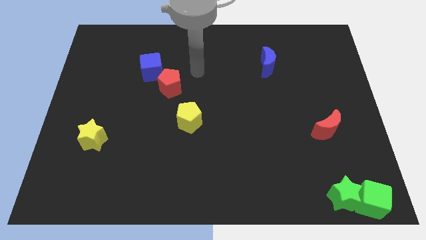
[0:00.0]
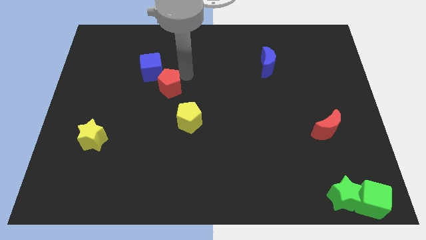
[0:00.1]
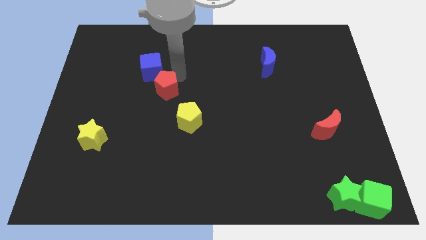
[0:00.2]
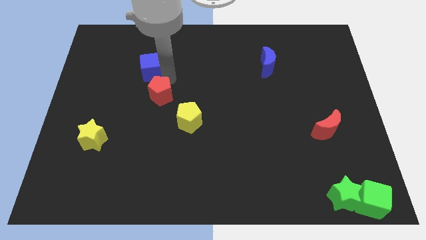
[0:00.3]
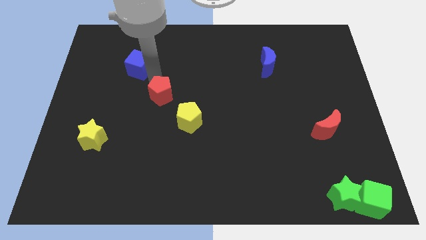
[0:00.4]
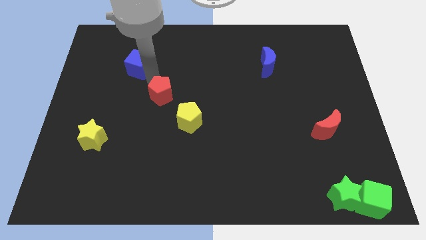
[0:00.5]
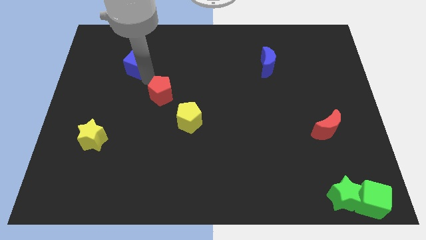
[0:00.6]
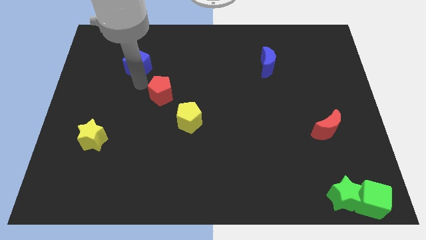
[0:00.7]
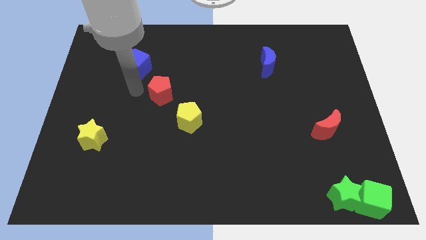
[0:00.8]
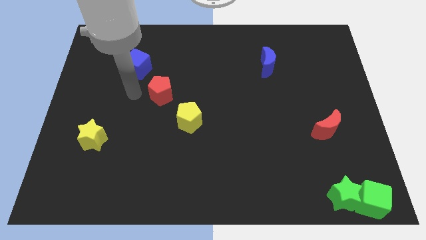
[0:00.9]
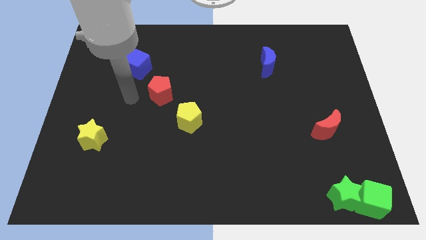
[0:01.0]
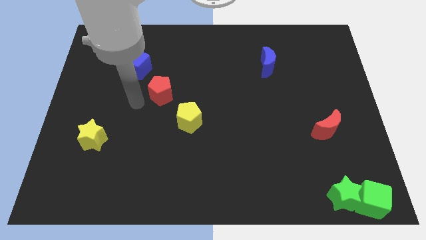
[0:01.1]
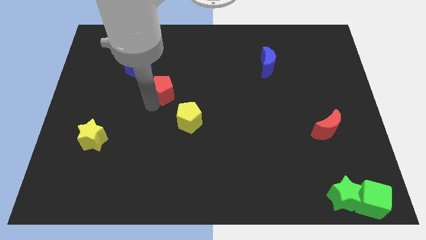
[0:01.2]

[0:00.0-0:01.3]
push the blue cube and red pentagon in different directions

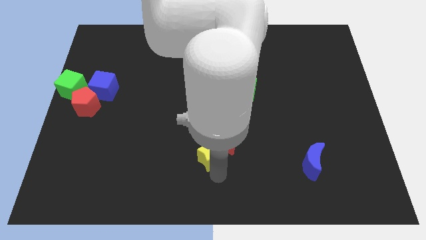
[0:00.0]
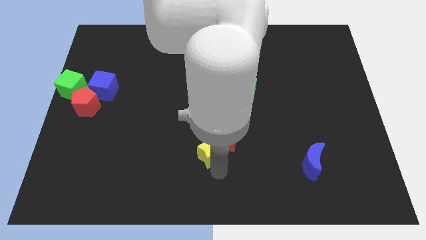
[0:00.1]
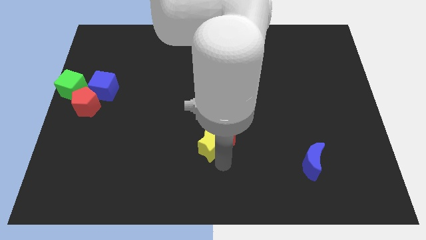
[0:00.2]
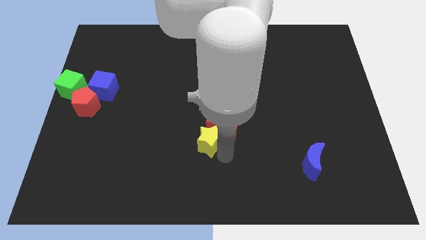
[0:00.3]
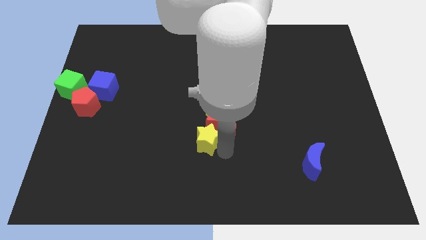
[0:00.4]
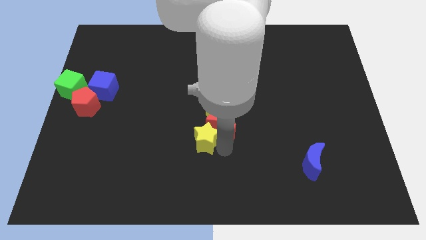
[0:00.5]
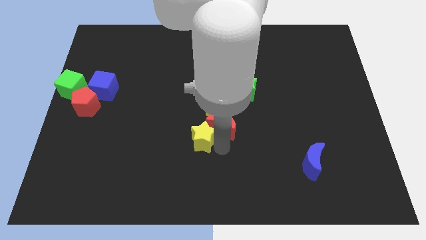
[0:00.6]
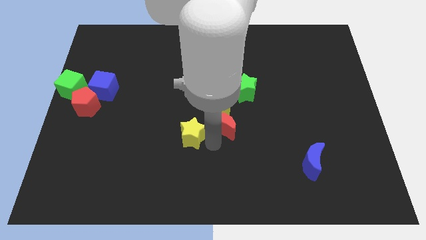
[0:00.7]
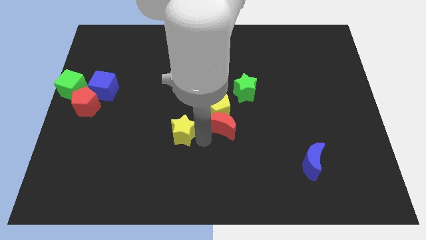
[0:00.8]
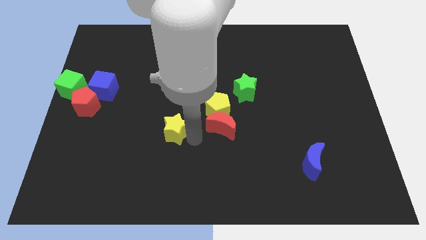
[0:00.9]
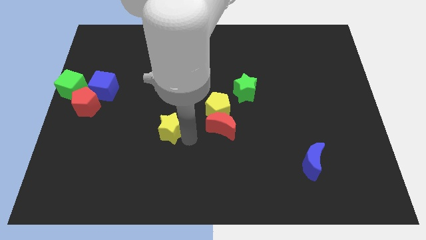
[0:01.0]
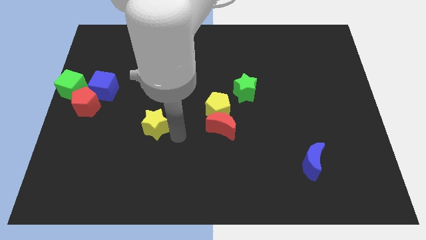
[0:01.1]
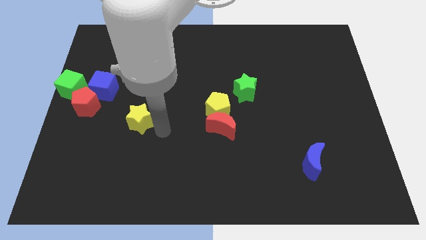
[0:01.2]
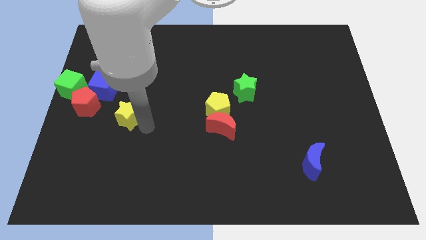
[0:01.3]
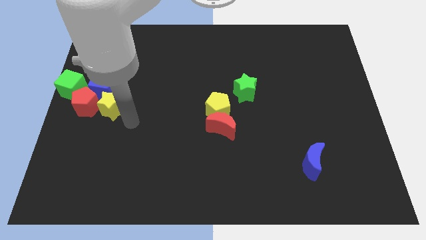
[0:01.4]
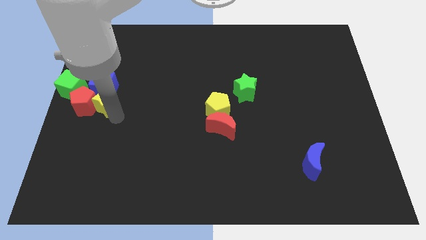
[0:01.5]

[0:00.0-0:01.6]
place yellow star to the right of red pentagon

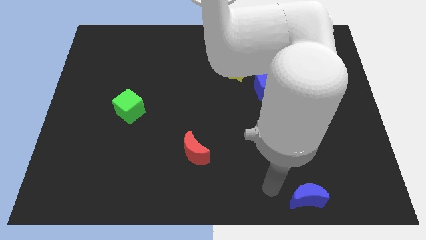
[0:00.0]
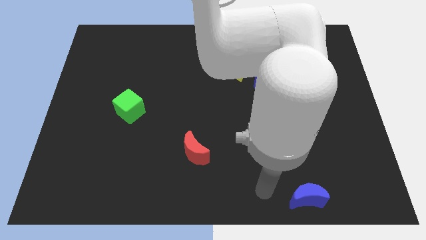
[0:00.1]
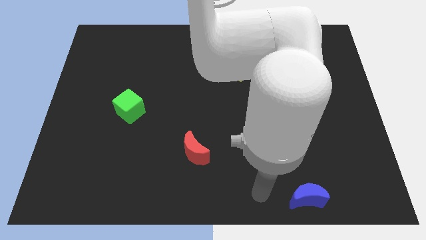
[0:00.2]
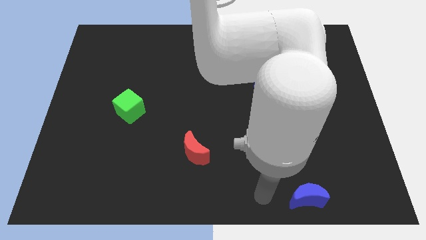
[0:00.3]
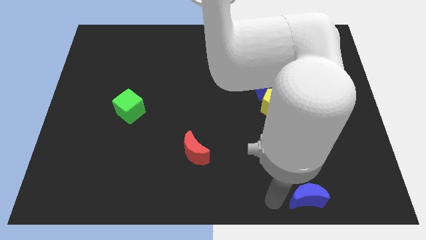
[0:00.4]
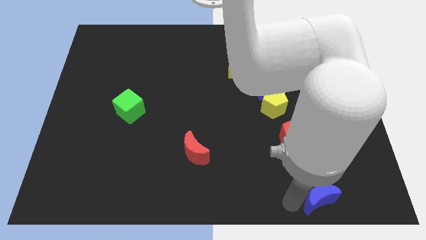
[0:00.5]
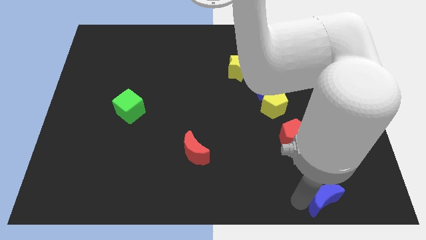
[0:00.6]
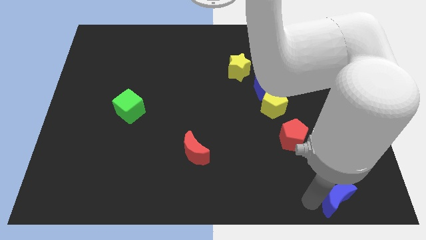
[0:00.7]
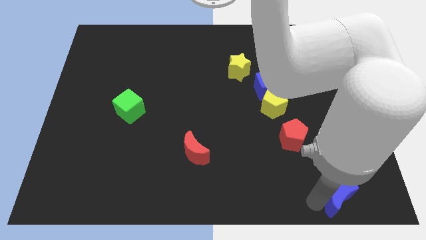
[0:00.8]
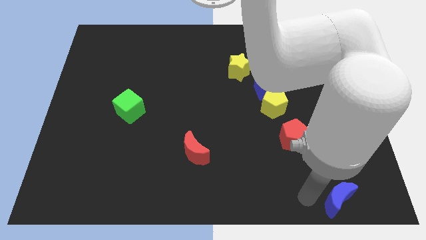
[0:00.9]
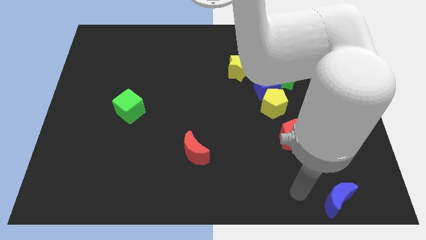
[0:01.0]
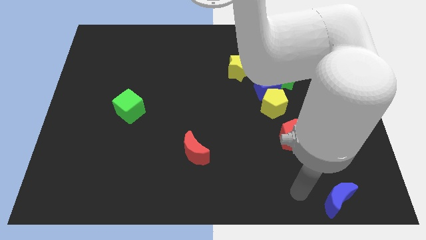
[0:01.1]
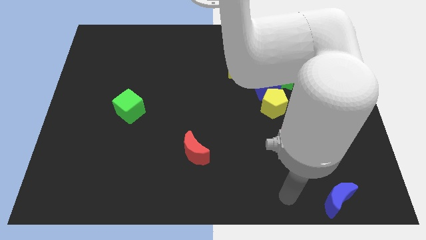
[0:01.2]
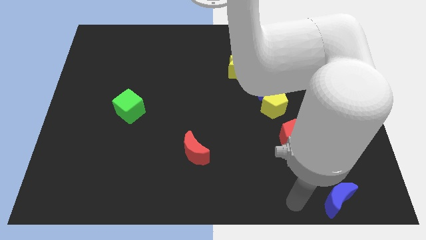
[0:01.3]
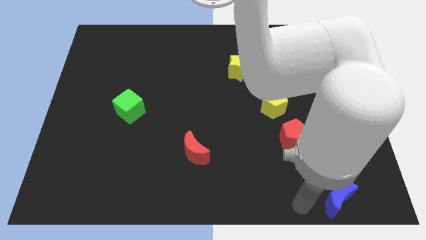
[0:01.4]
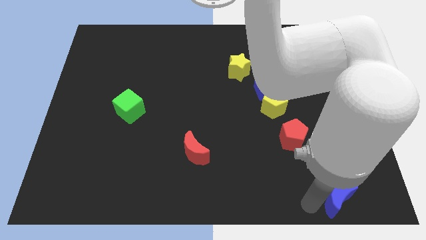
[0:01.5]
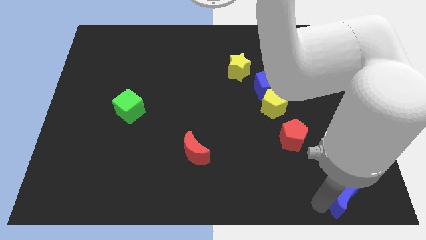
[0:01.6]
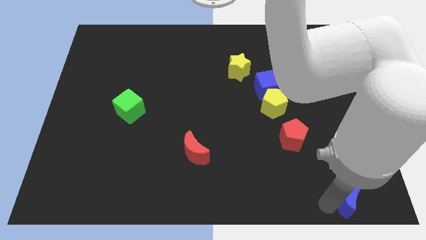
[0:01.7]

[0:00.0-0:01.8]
push the blue moon towards the bottom right

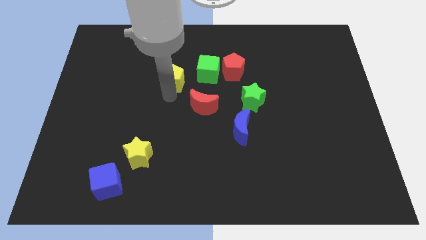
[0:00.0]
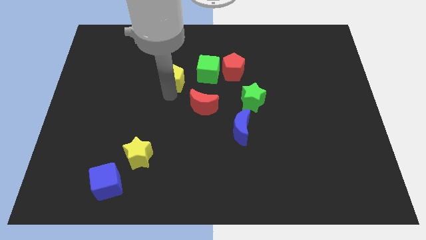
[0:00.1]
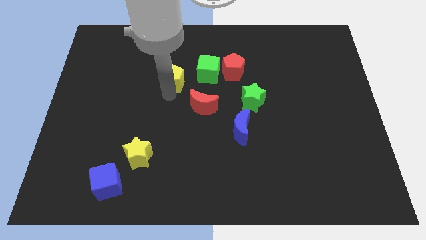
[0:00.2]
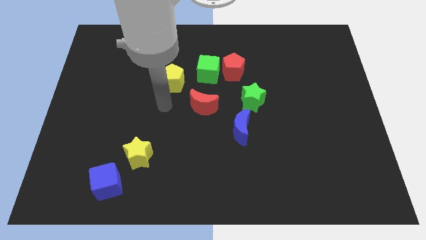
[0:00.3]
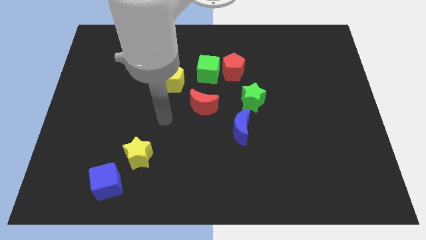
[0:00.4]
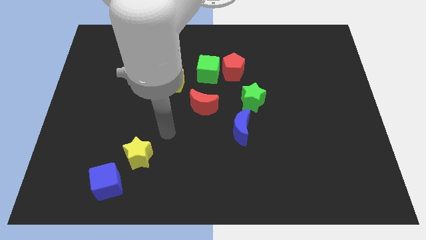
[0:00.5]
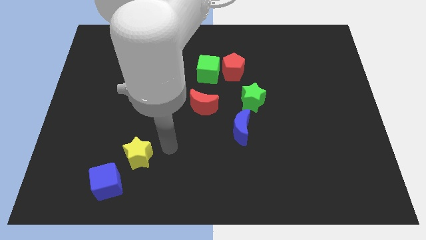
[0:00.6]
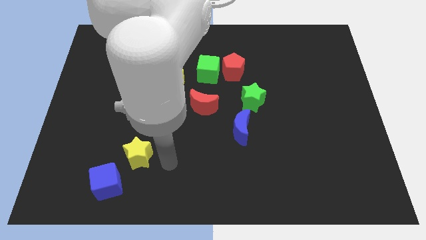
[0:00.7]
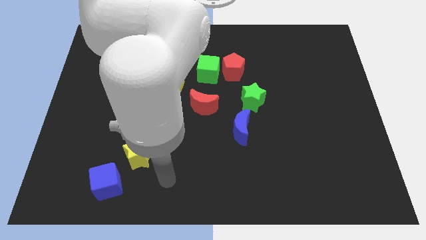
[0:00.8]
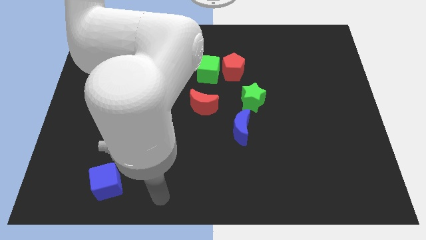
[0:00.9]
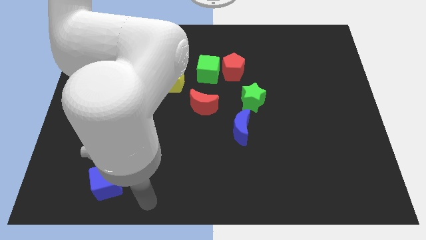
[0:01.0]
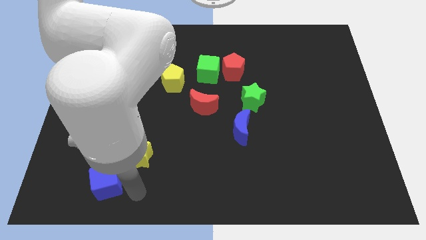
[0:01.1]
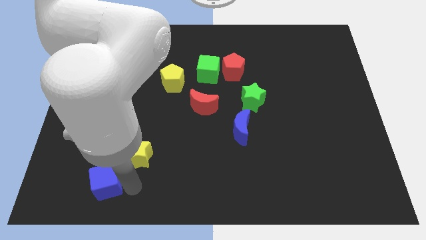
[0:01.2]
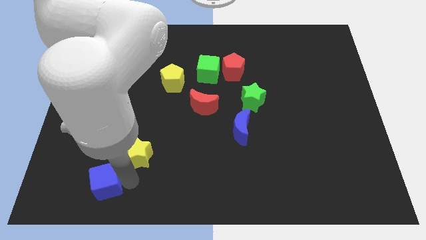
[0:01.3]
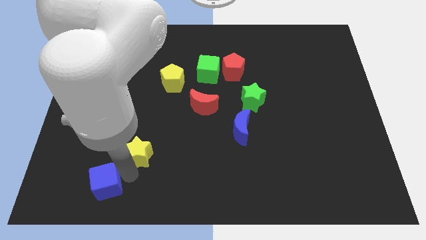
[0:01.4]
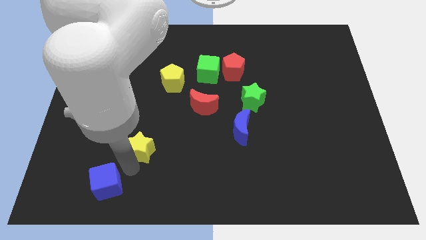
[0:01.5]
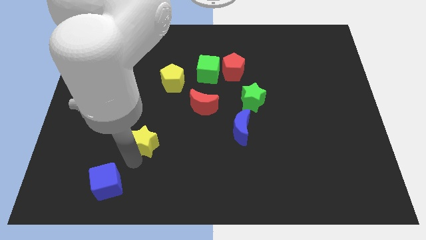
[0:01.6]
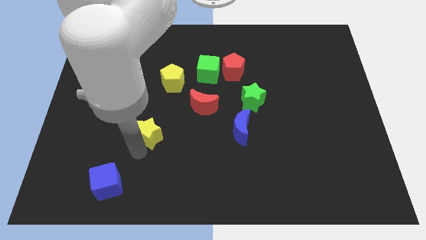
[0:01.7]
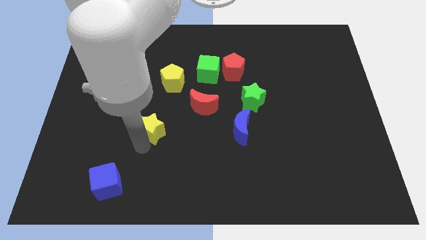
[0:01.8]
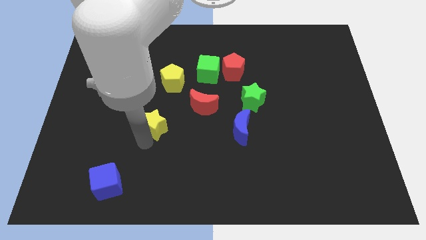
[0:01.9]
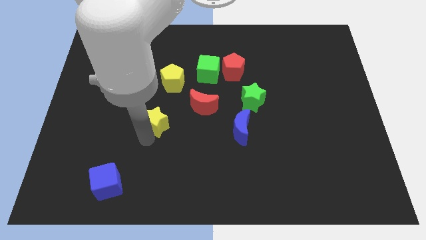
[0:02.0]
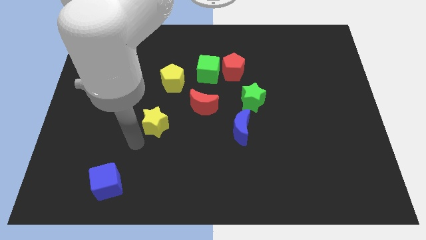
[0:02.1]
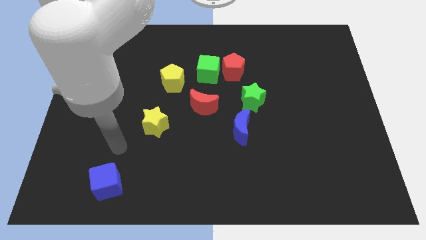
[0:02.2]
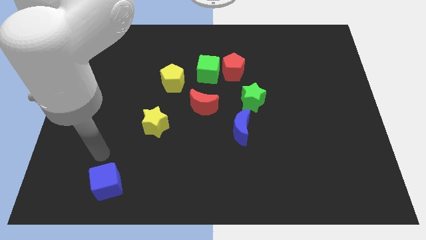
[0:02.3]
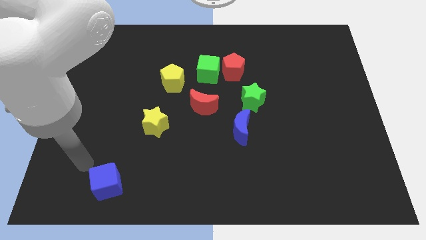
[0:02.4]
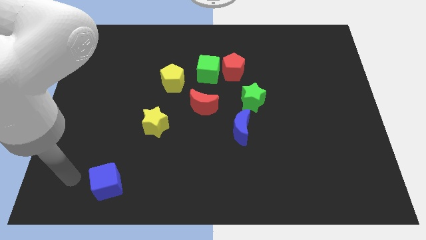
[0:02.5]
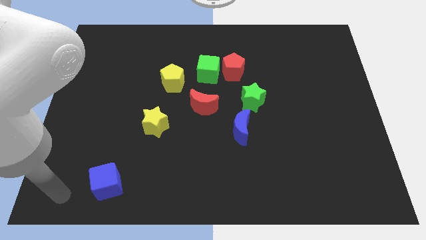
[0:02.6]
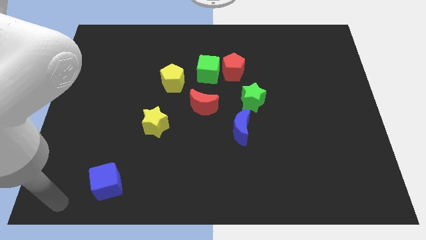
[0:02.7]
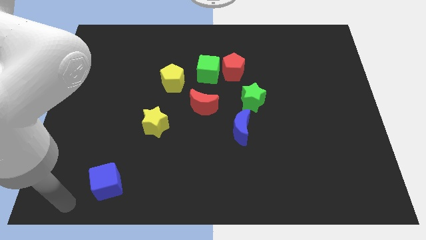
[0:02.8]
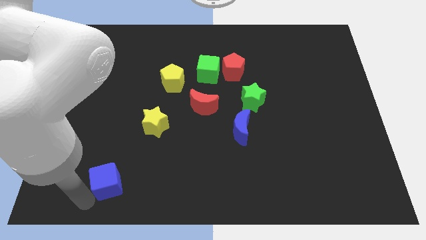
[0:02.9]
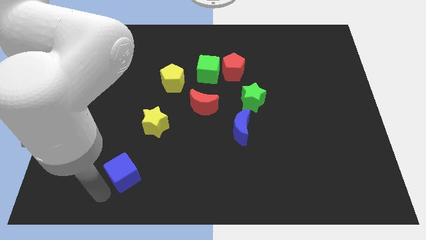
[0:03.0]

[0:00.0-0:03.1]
push the yellow star below the yellow pentagon

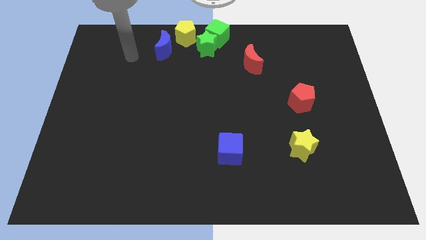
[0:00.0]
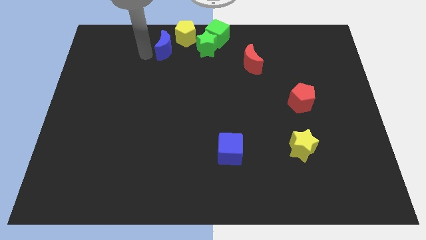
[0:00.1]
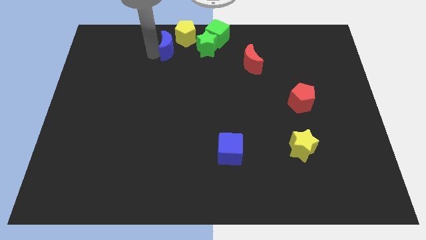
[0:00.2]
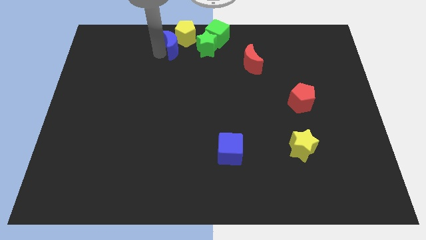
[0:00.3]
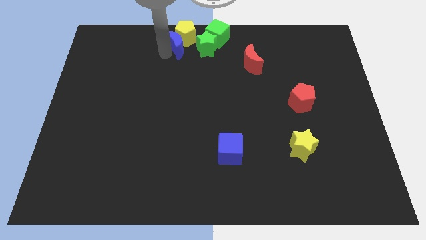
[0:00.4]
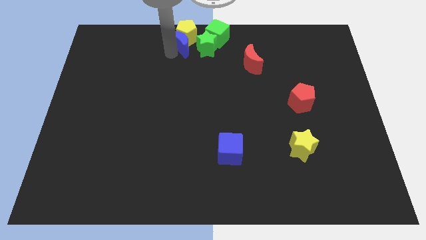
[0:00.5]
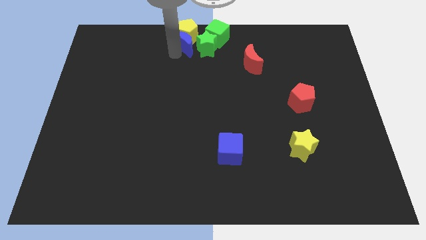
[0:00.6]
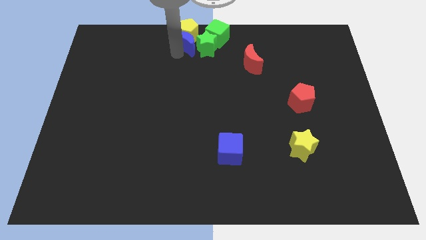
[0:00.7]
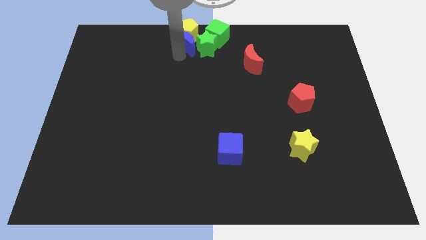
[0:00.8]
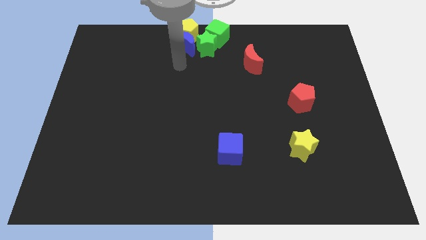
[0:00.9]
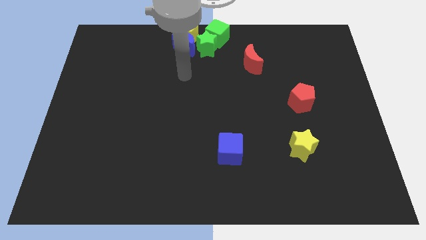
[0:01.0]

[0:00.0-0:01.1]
place the blue crescent to the bottom of the yellow pentagon
